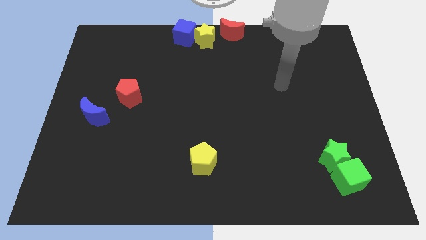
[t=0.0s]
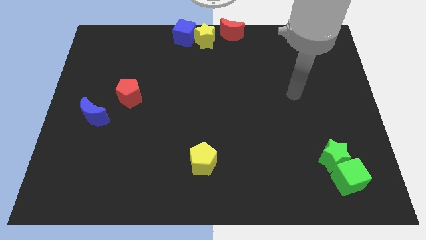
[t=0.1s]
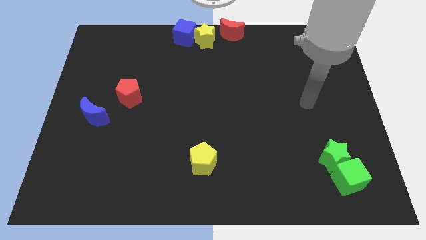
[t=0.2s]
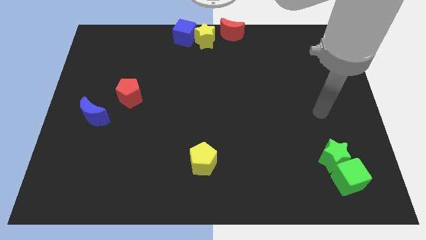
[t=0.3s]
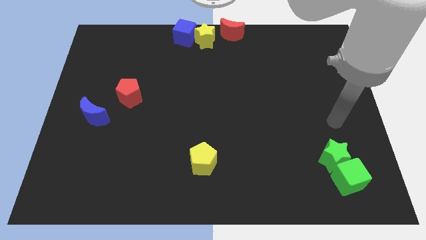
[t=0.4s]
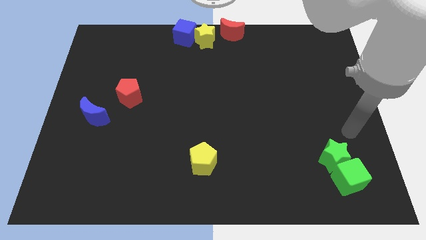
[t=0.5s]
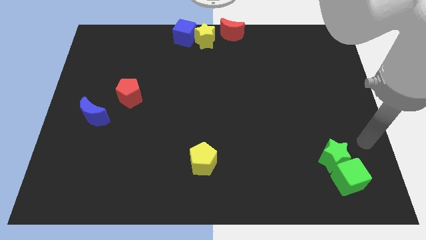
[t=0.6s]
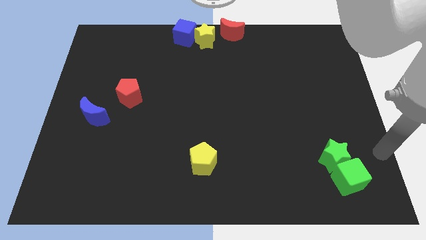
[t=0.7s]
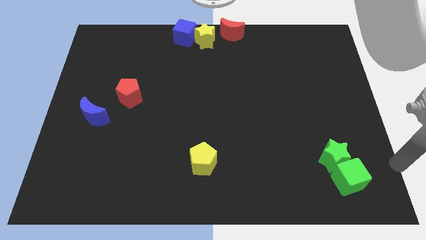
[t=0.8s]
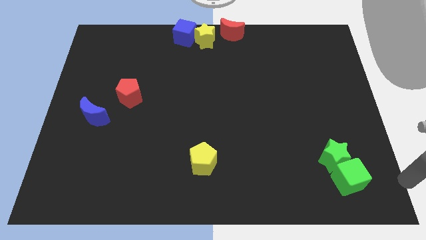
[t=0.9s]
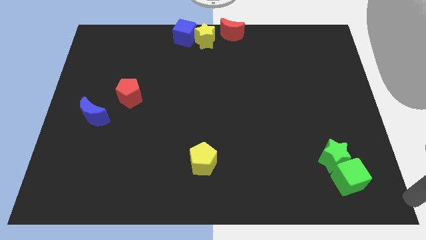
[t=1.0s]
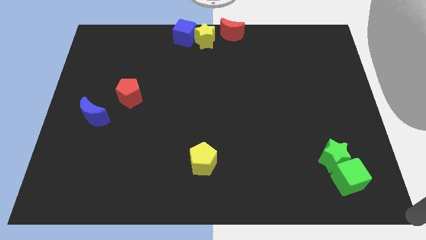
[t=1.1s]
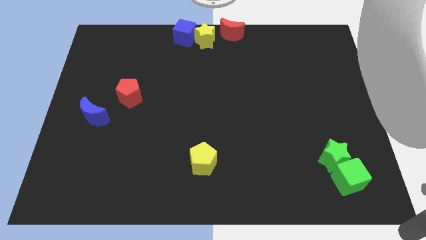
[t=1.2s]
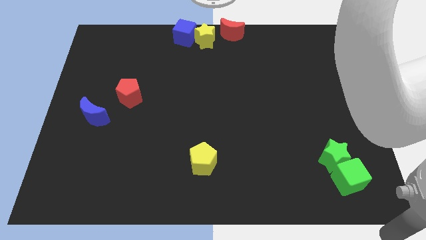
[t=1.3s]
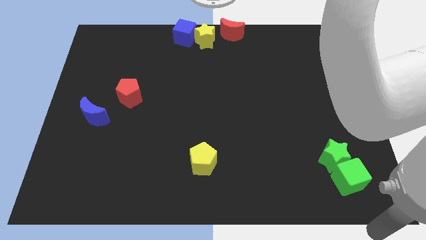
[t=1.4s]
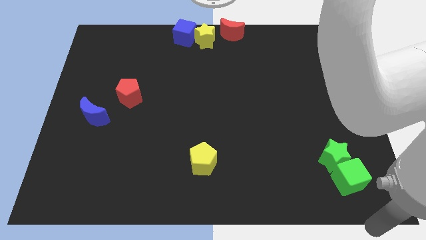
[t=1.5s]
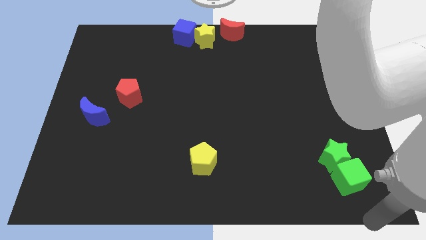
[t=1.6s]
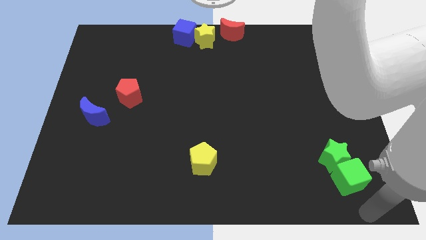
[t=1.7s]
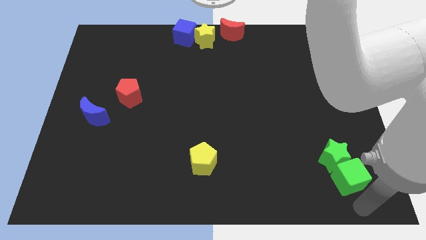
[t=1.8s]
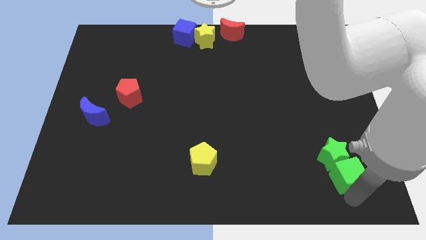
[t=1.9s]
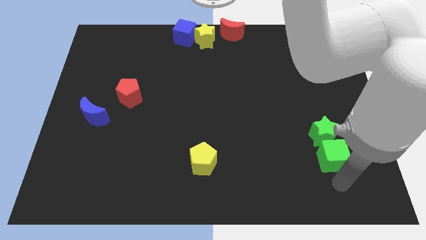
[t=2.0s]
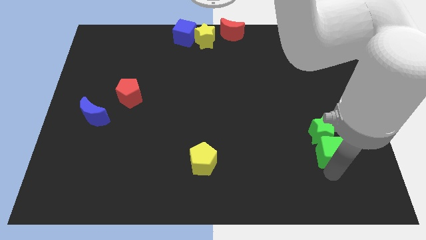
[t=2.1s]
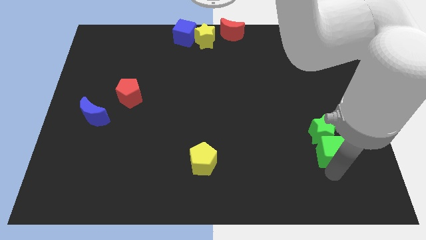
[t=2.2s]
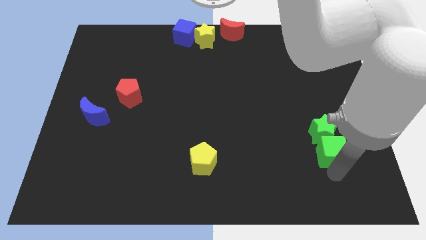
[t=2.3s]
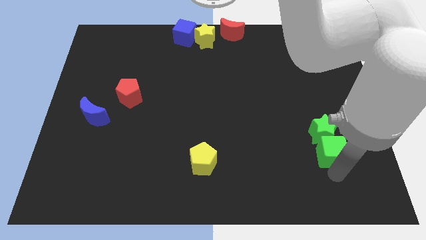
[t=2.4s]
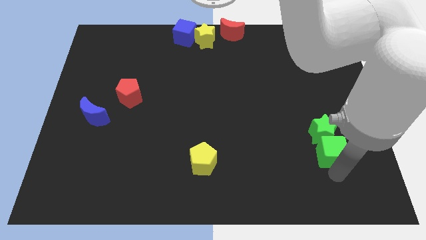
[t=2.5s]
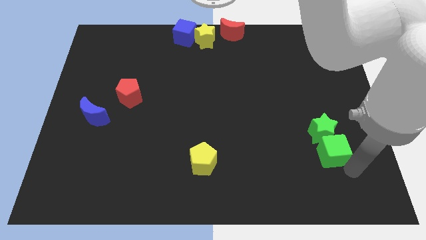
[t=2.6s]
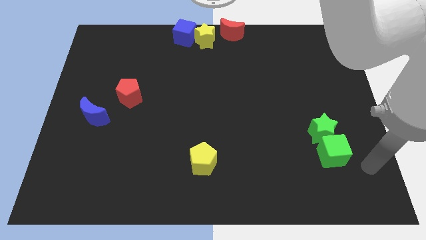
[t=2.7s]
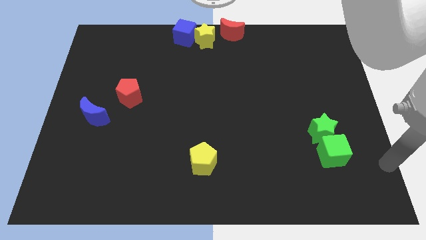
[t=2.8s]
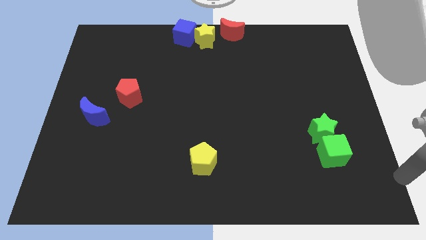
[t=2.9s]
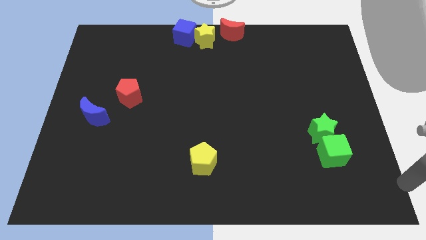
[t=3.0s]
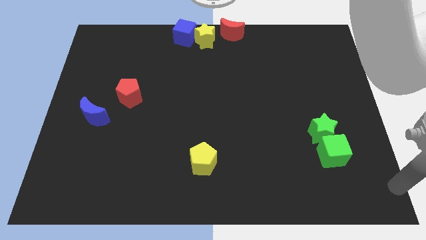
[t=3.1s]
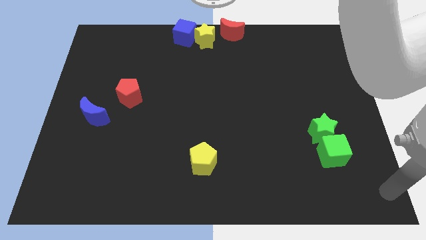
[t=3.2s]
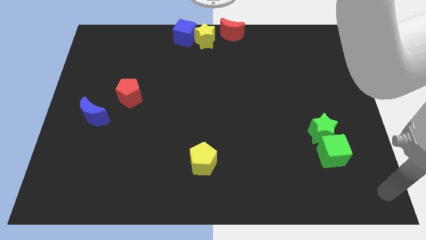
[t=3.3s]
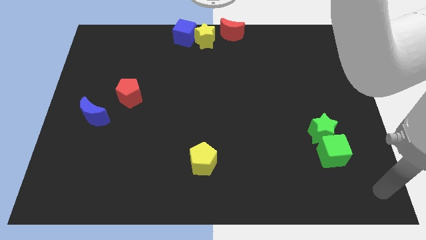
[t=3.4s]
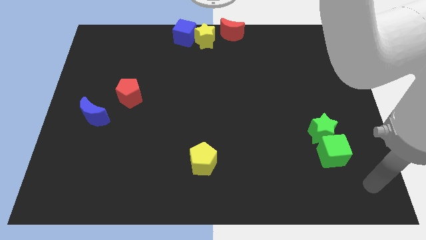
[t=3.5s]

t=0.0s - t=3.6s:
push both the green blocks slightly to the top side of the board

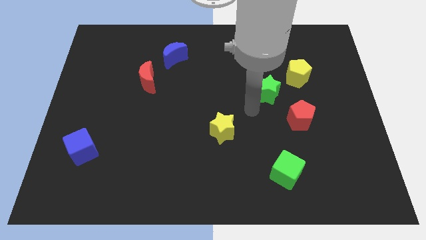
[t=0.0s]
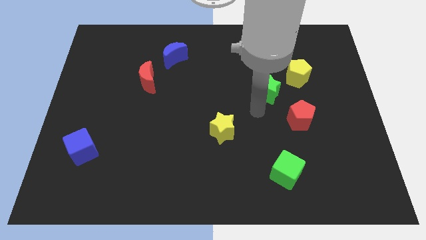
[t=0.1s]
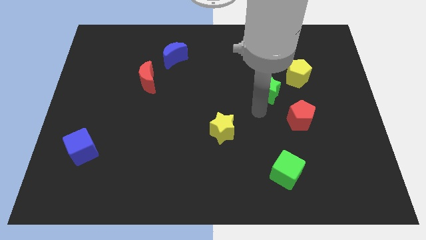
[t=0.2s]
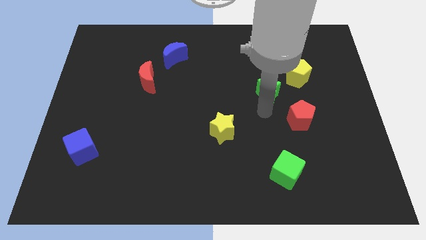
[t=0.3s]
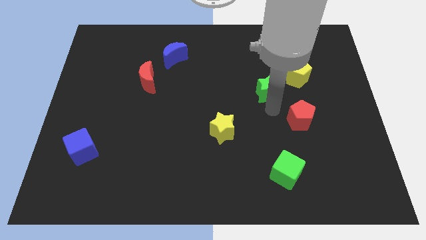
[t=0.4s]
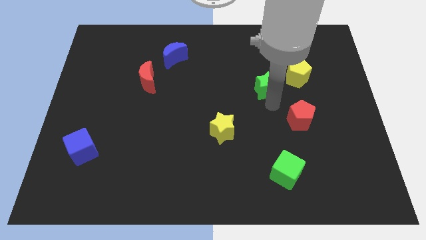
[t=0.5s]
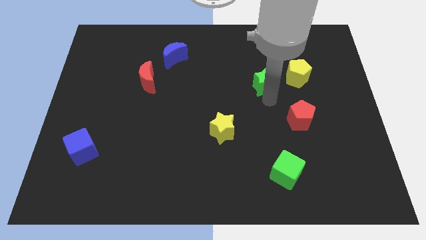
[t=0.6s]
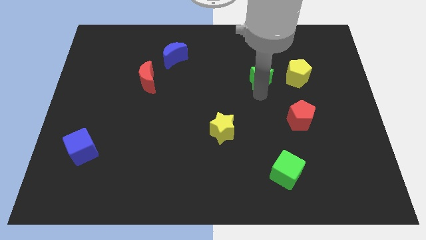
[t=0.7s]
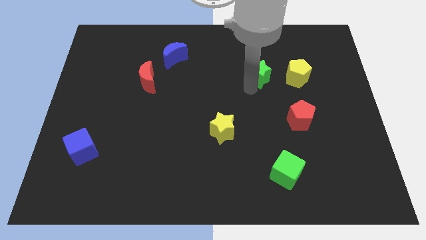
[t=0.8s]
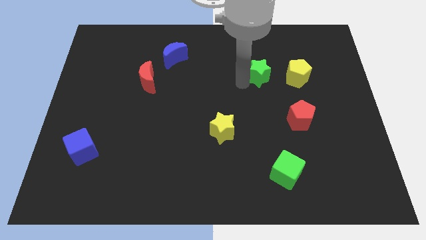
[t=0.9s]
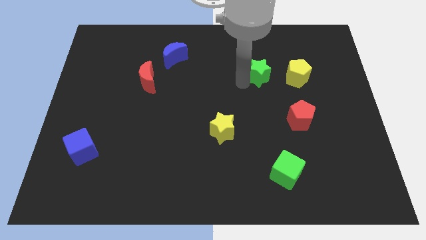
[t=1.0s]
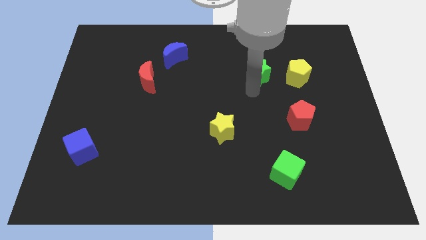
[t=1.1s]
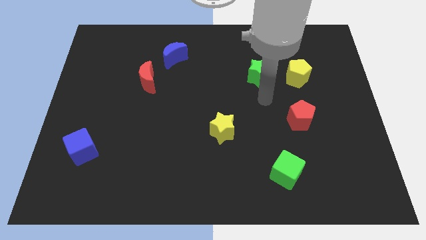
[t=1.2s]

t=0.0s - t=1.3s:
place the green star to the left side of the yellow pentagon

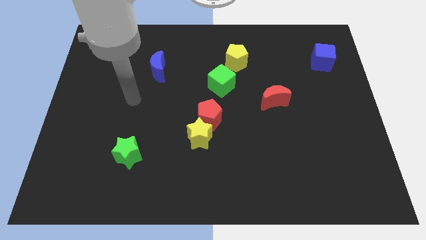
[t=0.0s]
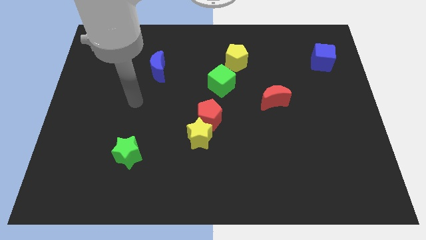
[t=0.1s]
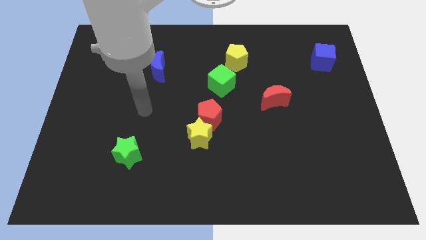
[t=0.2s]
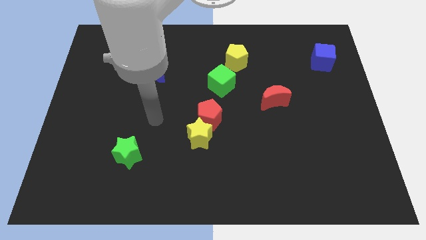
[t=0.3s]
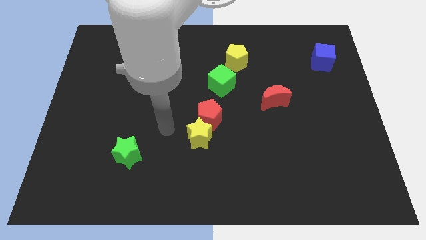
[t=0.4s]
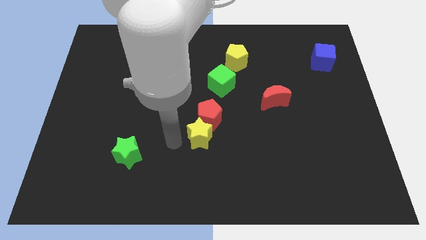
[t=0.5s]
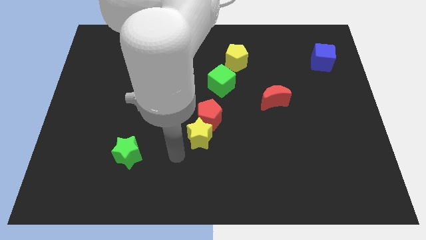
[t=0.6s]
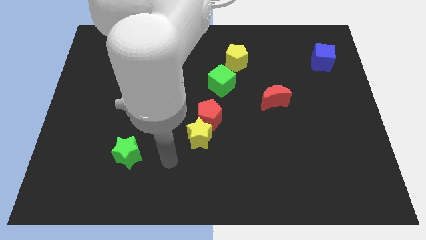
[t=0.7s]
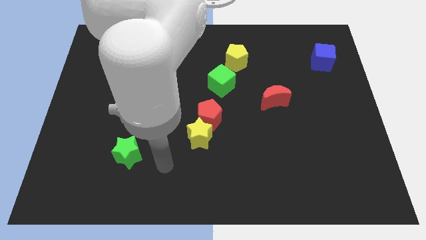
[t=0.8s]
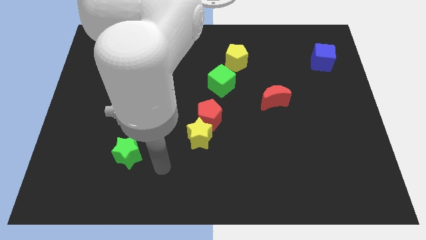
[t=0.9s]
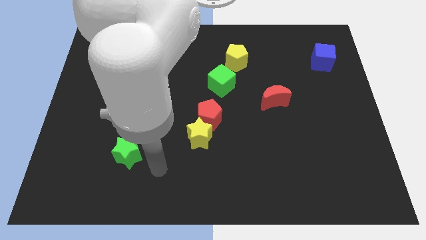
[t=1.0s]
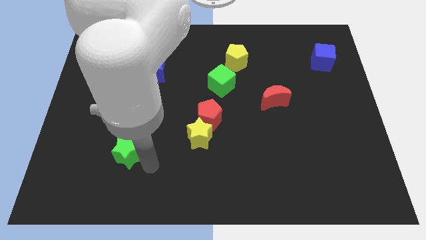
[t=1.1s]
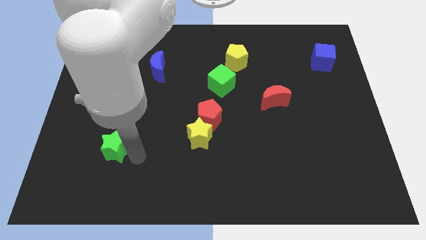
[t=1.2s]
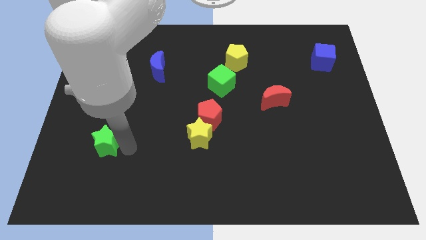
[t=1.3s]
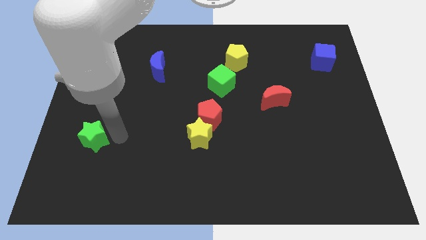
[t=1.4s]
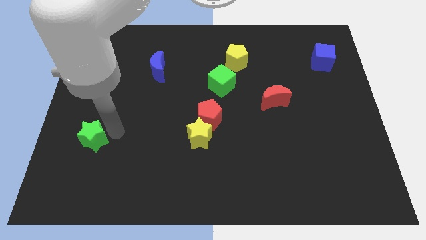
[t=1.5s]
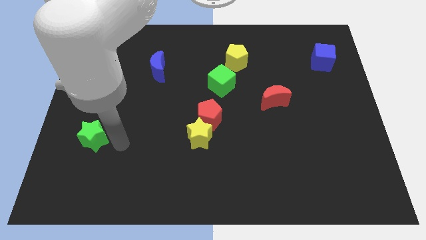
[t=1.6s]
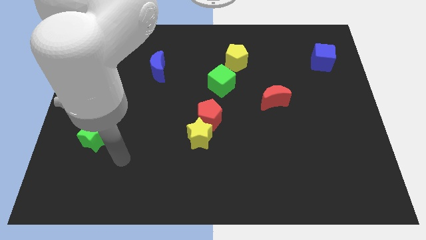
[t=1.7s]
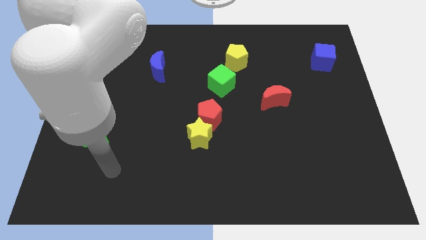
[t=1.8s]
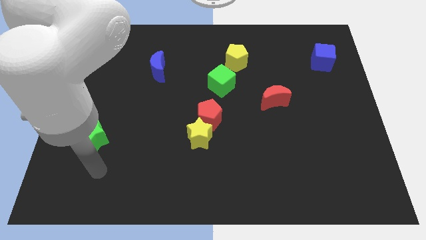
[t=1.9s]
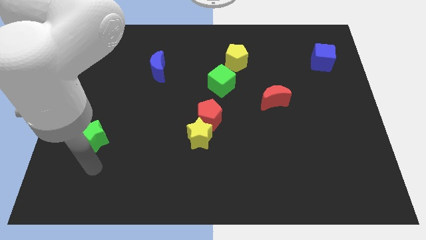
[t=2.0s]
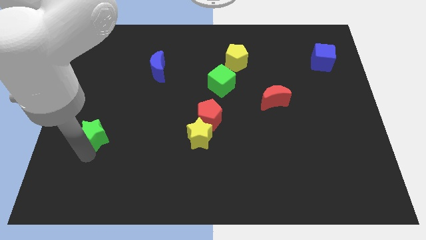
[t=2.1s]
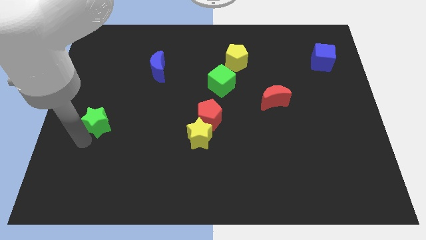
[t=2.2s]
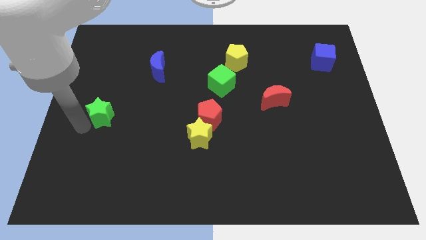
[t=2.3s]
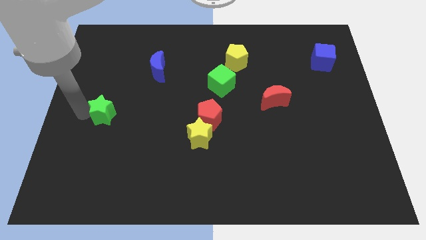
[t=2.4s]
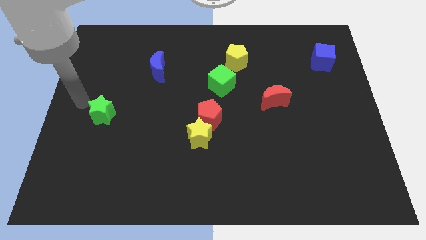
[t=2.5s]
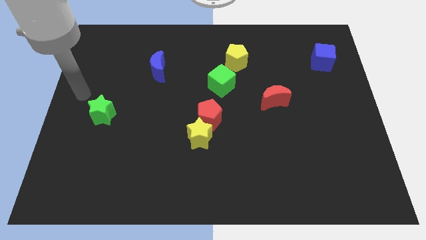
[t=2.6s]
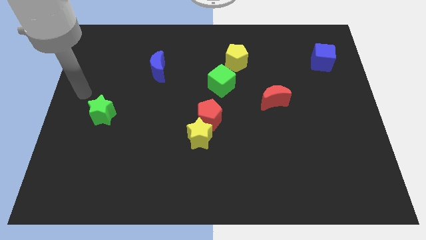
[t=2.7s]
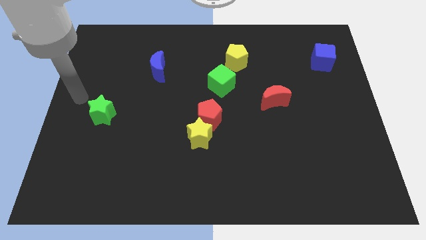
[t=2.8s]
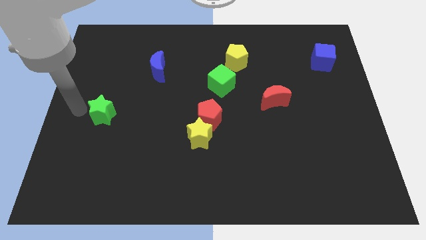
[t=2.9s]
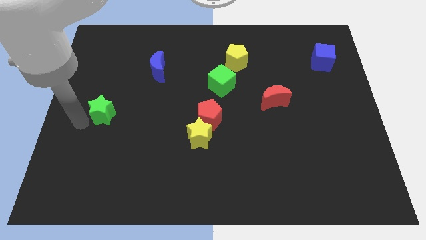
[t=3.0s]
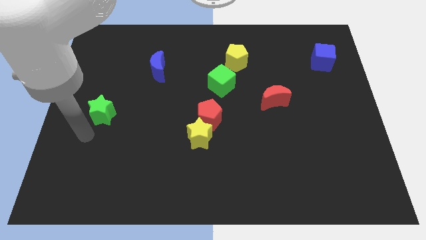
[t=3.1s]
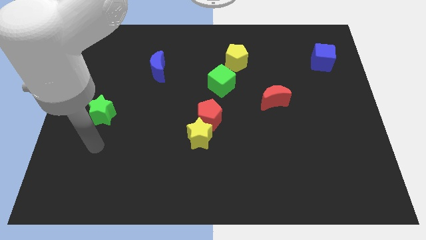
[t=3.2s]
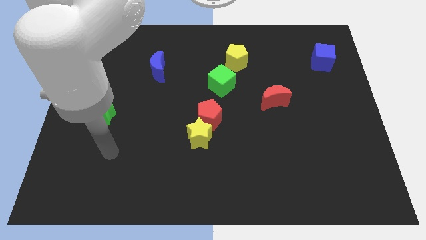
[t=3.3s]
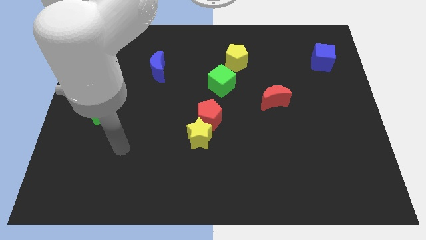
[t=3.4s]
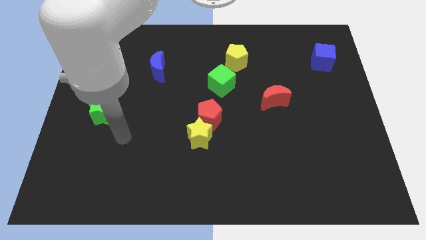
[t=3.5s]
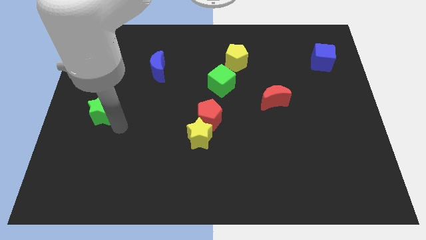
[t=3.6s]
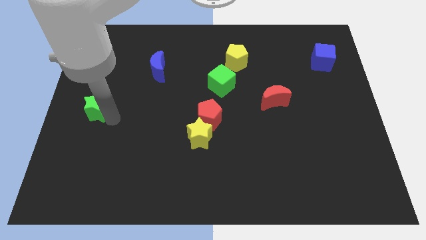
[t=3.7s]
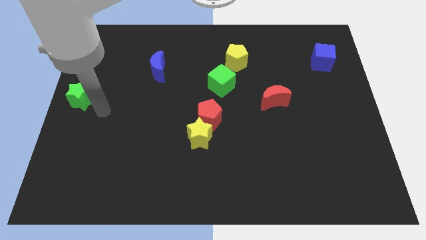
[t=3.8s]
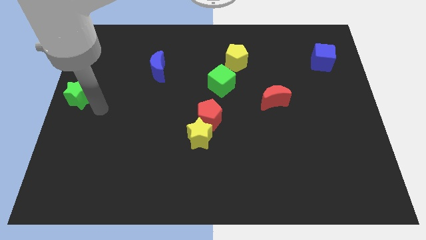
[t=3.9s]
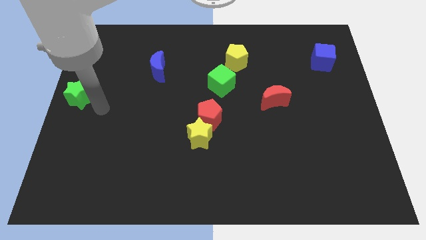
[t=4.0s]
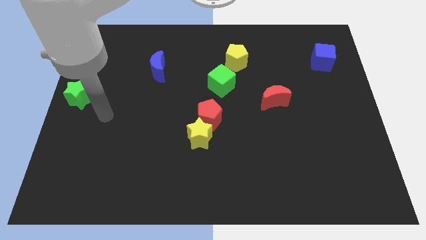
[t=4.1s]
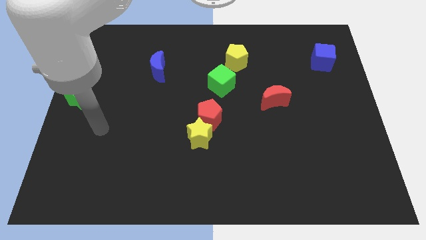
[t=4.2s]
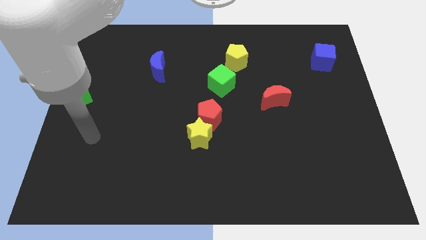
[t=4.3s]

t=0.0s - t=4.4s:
place green star to the left center of the board
